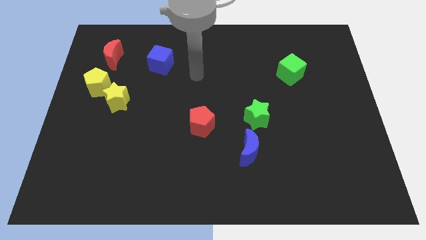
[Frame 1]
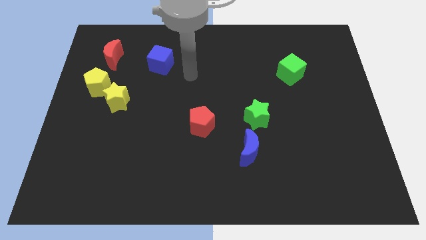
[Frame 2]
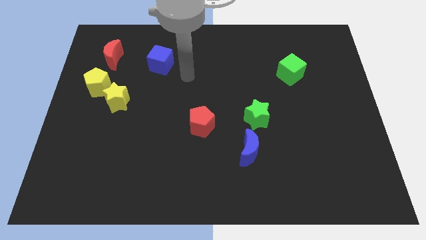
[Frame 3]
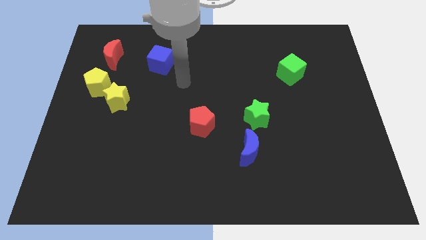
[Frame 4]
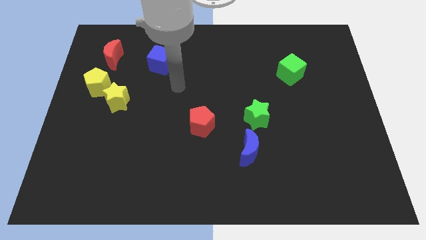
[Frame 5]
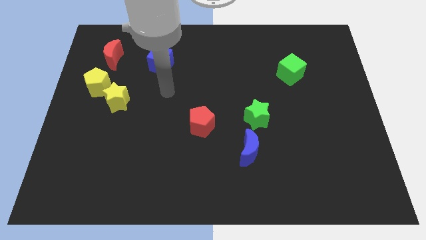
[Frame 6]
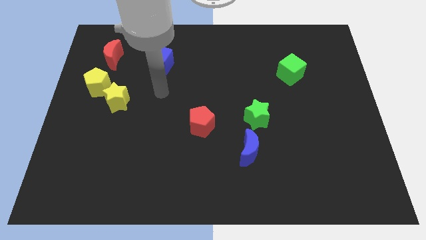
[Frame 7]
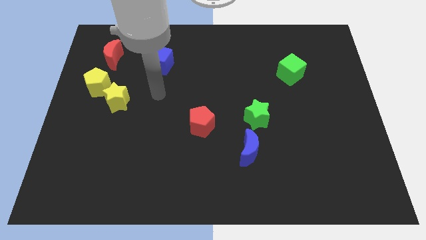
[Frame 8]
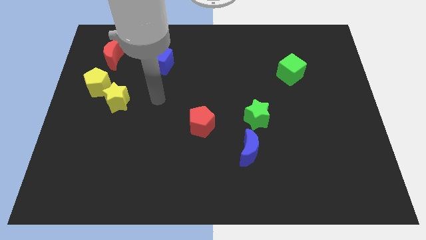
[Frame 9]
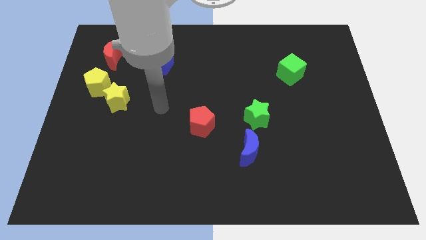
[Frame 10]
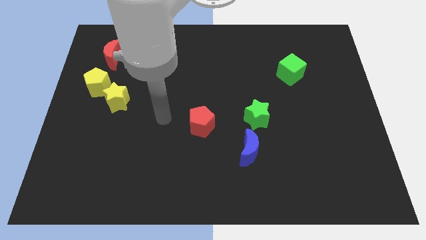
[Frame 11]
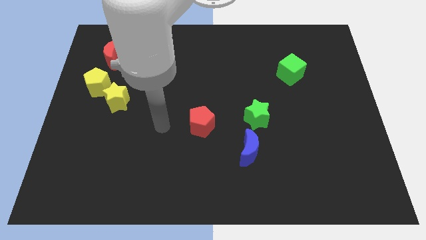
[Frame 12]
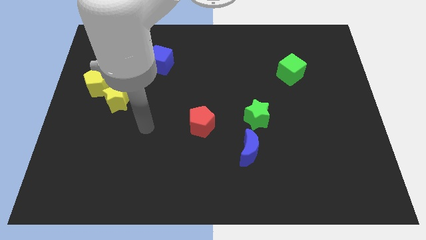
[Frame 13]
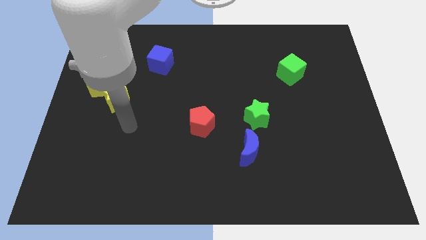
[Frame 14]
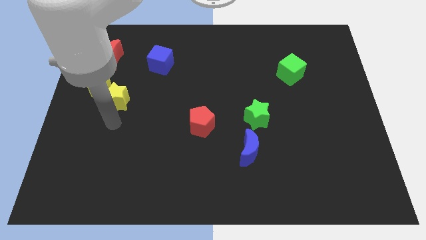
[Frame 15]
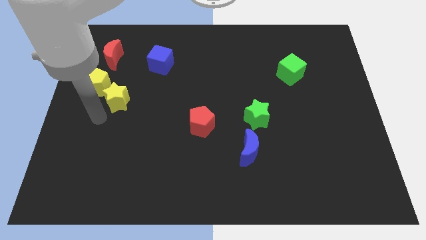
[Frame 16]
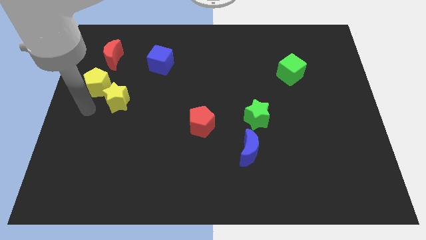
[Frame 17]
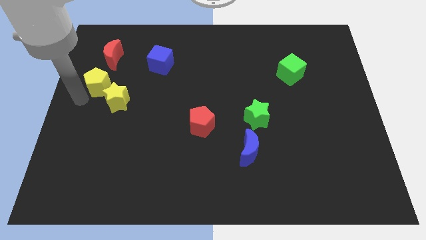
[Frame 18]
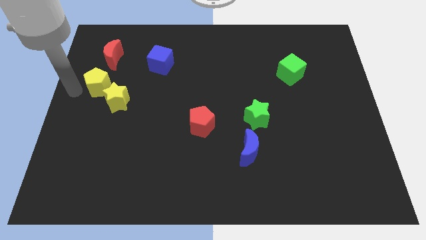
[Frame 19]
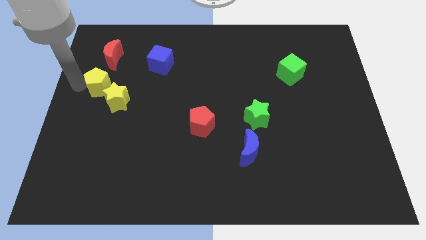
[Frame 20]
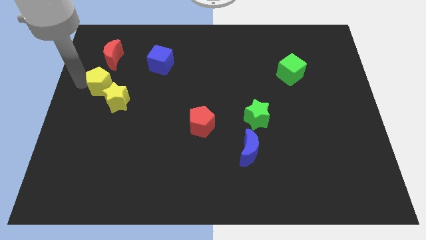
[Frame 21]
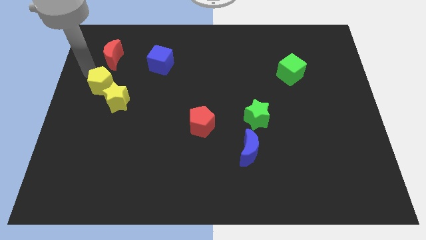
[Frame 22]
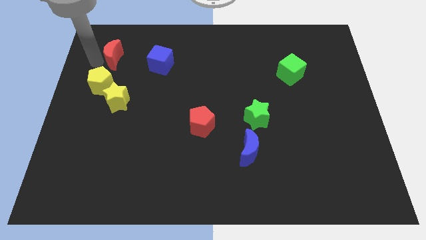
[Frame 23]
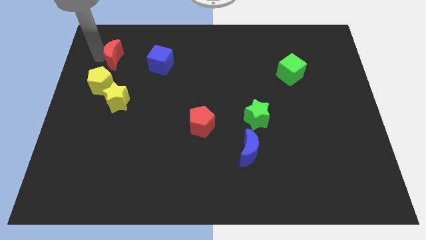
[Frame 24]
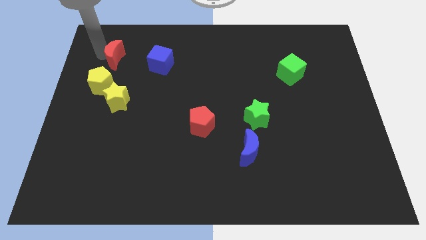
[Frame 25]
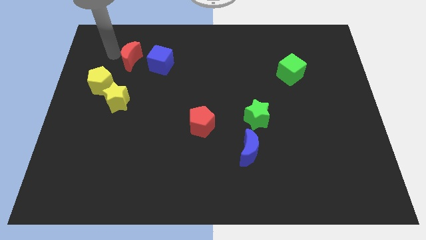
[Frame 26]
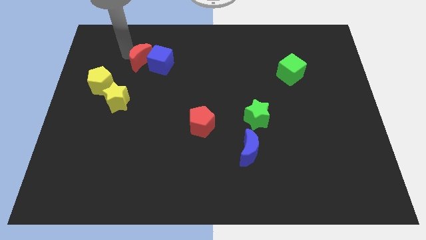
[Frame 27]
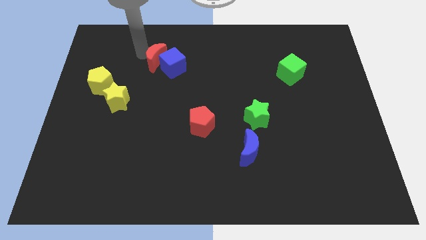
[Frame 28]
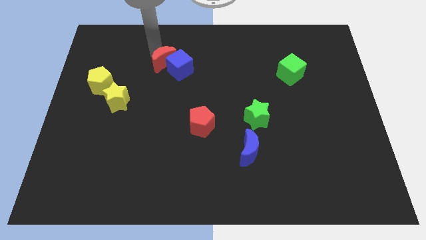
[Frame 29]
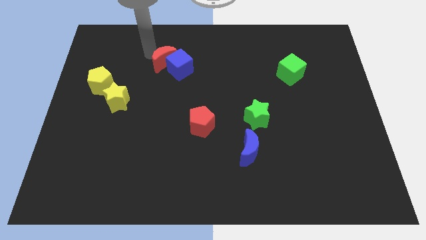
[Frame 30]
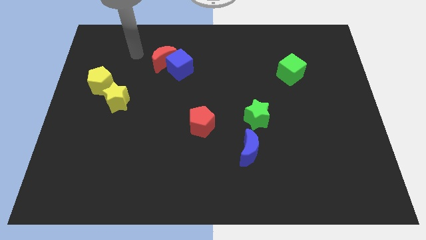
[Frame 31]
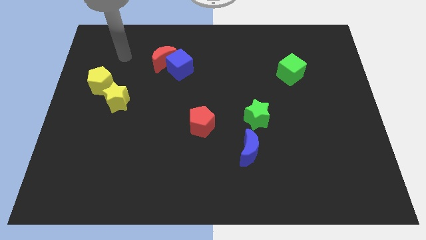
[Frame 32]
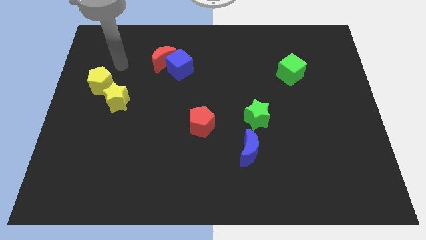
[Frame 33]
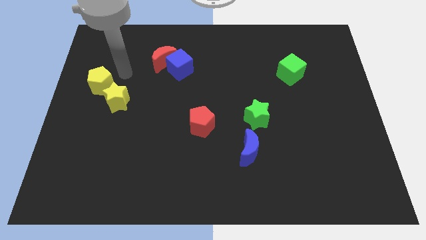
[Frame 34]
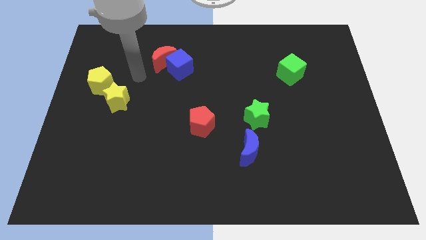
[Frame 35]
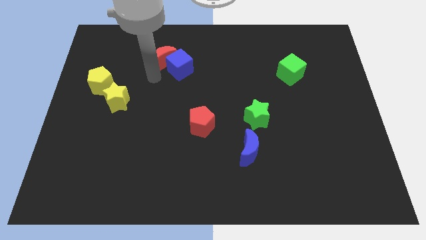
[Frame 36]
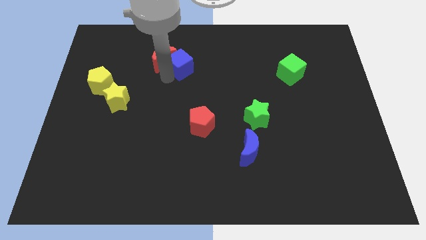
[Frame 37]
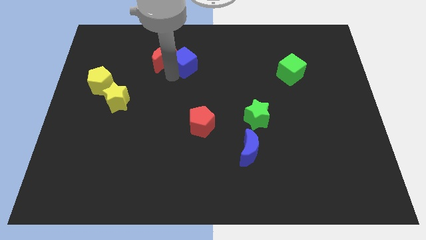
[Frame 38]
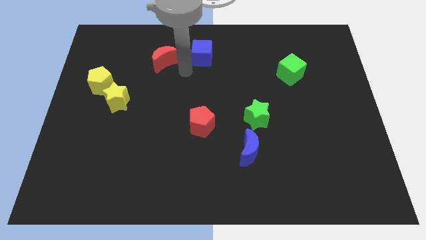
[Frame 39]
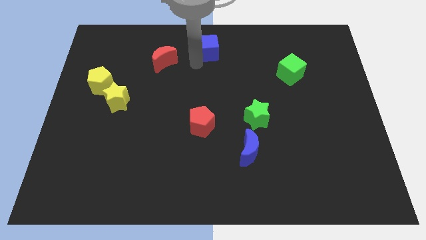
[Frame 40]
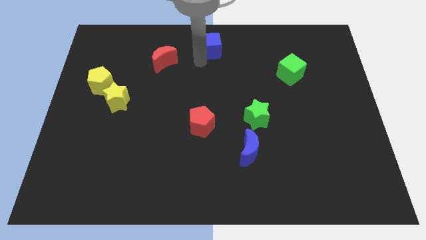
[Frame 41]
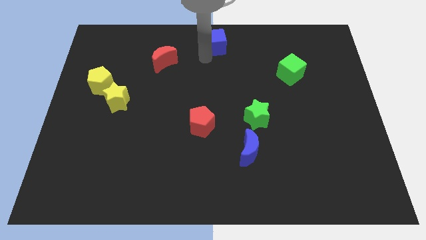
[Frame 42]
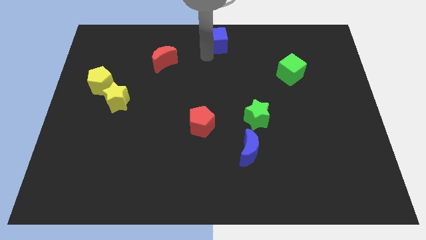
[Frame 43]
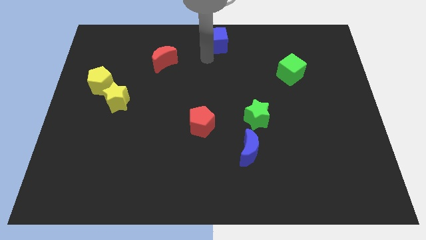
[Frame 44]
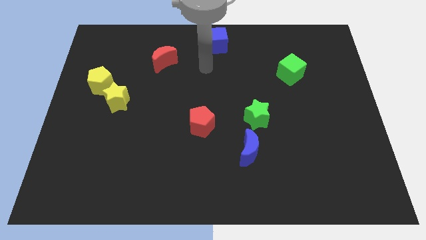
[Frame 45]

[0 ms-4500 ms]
push the yellow pentagon towards the yellow star

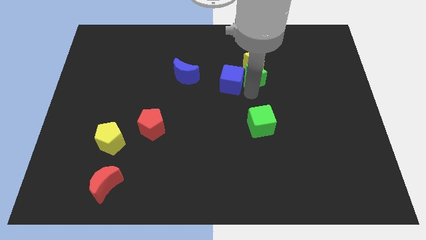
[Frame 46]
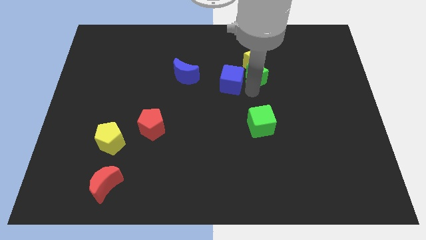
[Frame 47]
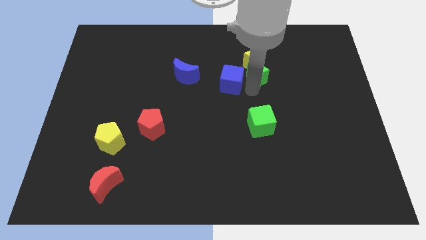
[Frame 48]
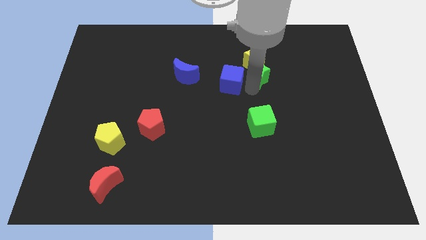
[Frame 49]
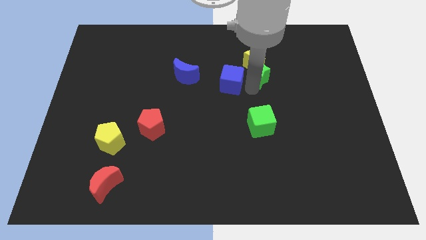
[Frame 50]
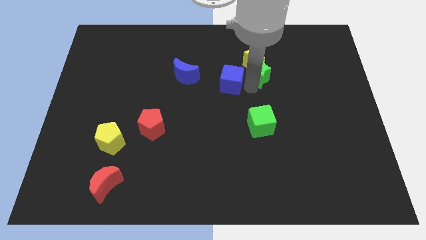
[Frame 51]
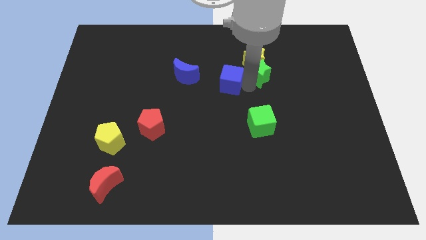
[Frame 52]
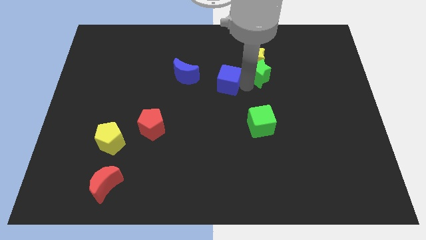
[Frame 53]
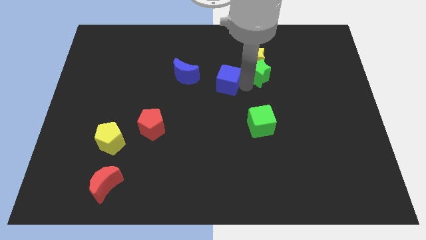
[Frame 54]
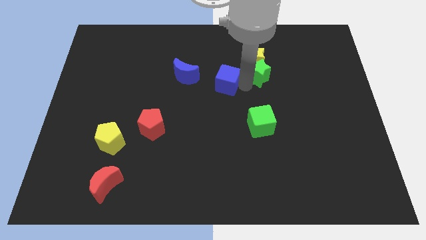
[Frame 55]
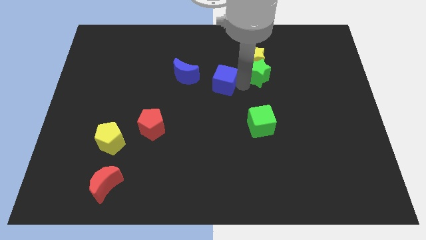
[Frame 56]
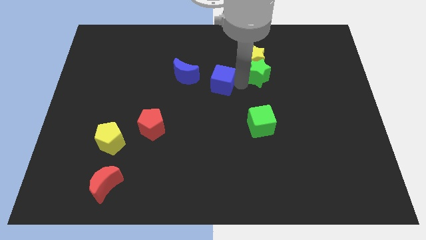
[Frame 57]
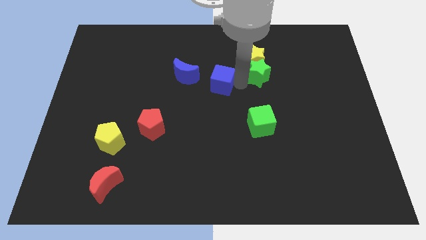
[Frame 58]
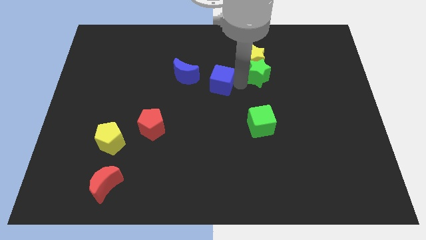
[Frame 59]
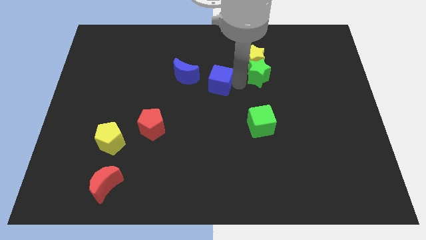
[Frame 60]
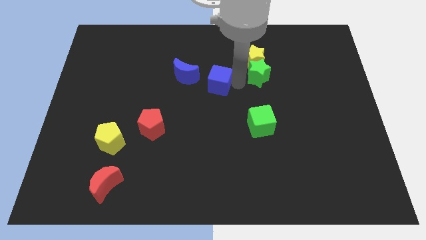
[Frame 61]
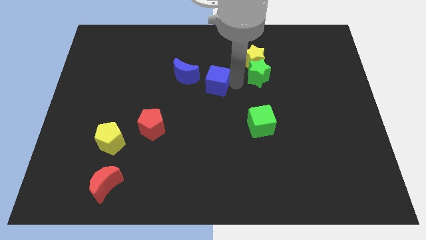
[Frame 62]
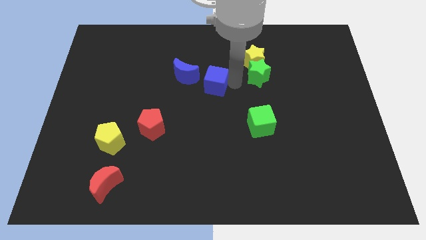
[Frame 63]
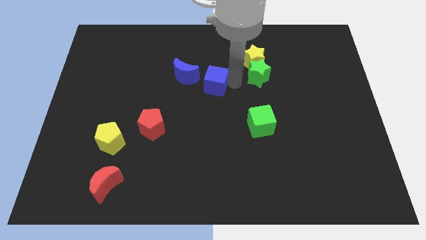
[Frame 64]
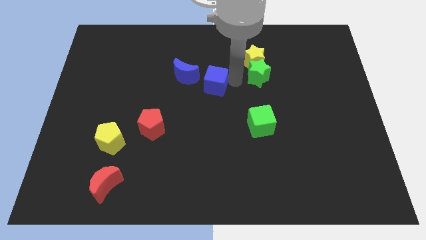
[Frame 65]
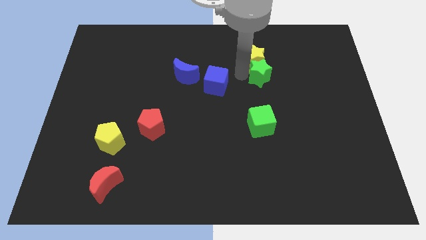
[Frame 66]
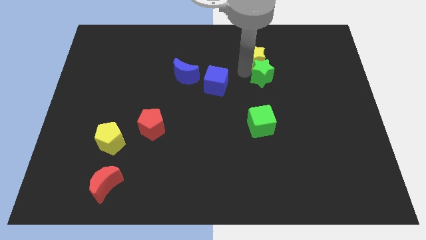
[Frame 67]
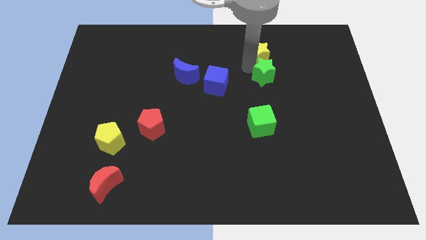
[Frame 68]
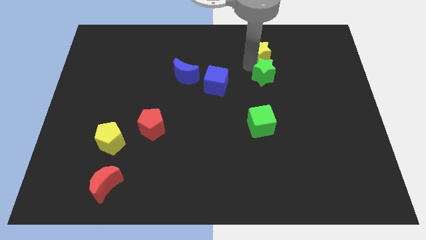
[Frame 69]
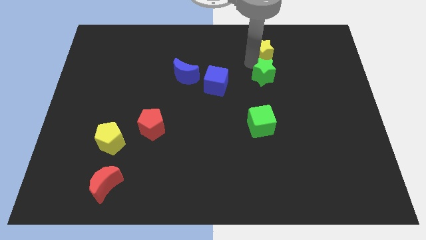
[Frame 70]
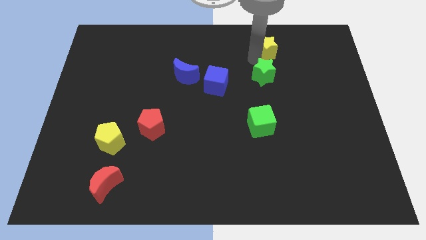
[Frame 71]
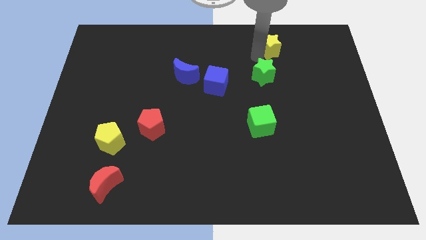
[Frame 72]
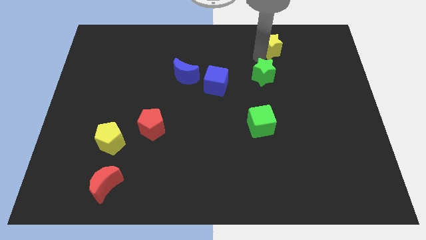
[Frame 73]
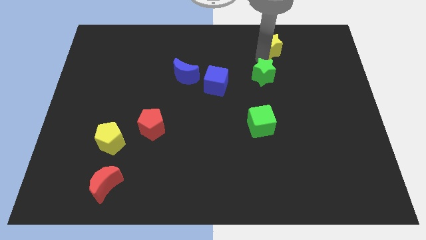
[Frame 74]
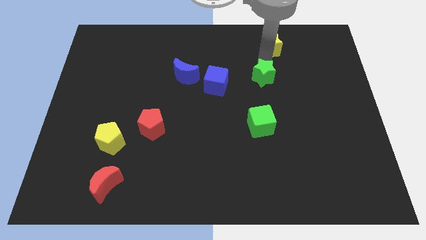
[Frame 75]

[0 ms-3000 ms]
push yellow star slightly towards up

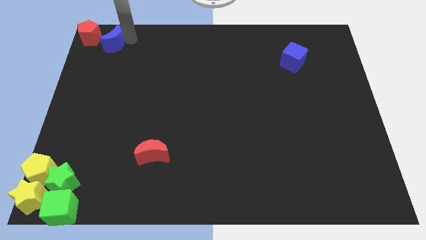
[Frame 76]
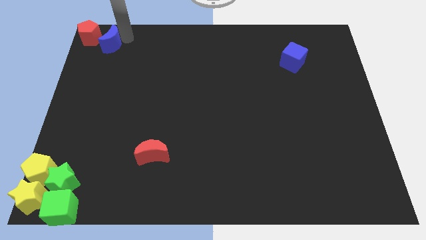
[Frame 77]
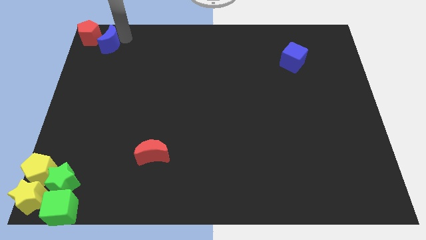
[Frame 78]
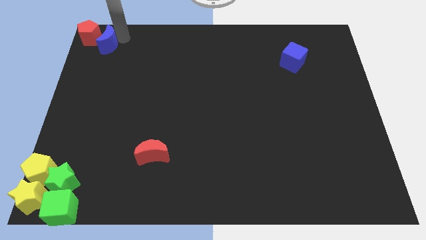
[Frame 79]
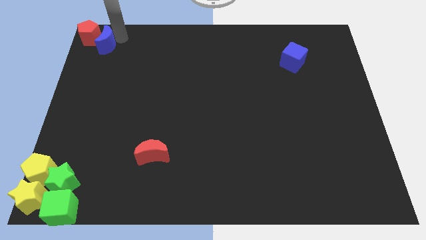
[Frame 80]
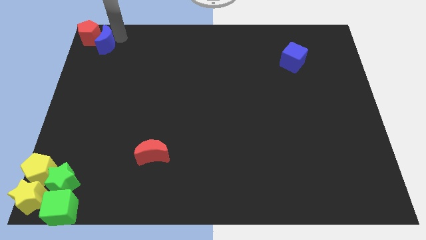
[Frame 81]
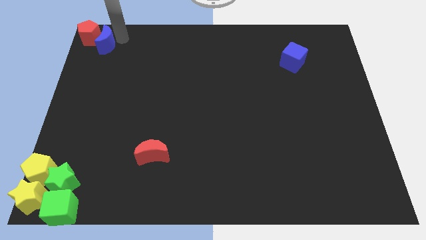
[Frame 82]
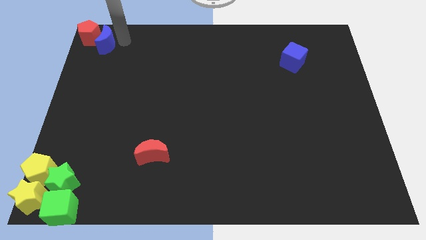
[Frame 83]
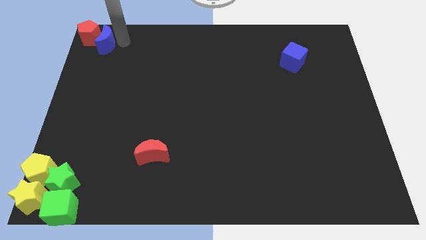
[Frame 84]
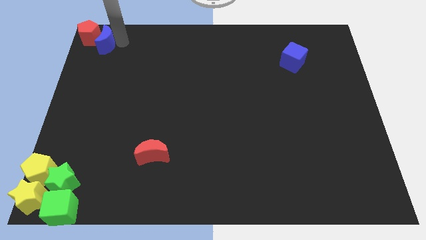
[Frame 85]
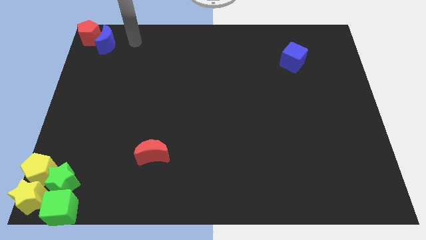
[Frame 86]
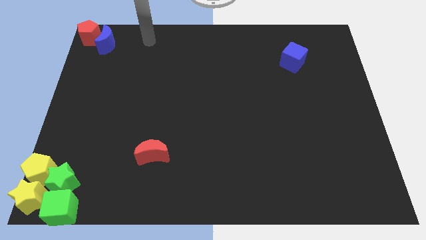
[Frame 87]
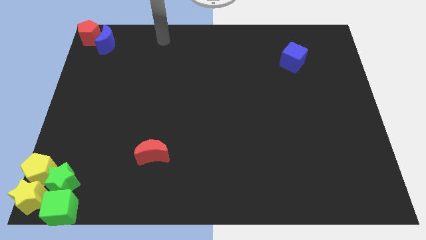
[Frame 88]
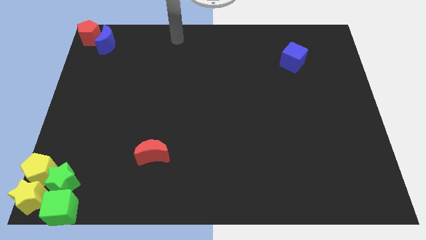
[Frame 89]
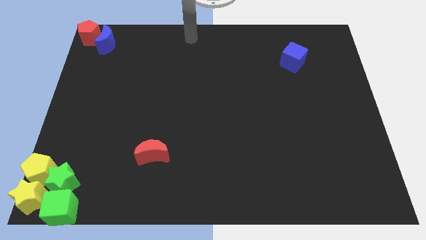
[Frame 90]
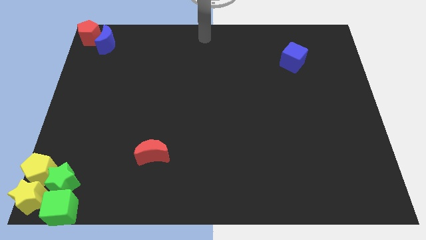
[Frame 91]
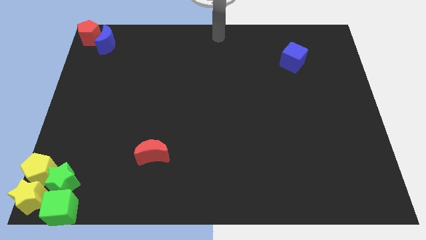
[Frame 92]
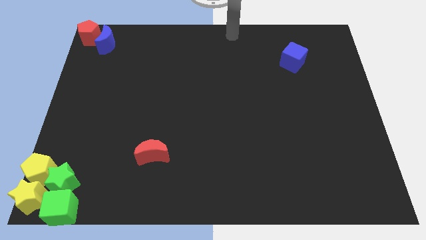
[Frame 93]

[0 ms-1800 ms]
push the blue moon into the red pentagon
